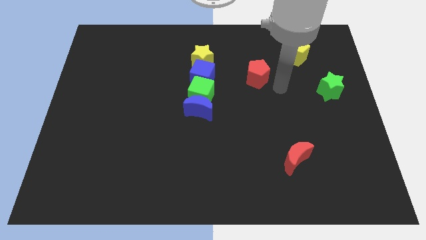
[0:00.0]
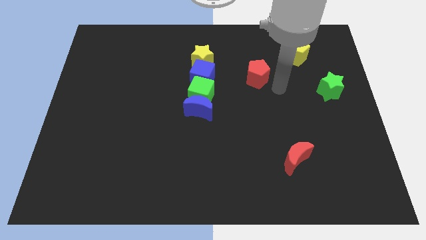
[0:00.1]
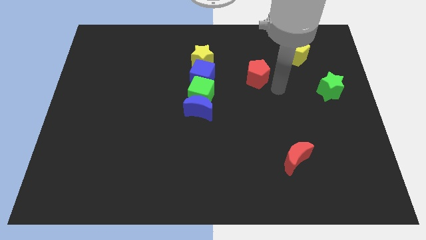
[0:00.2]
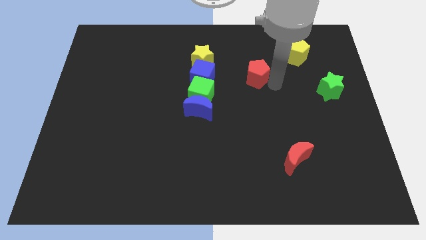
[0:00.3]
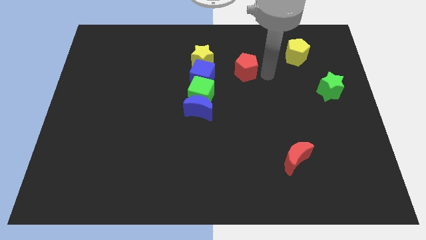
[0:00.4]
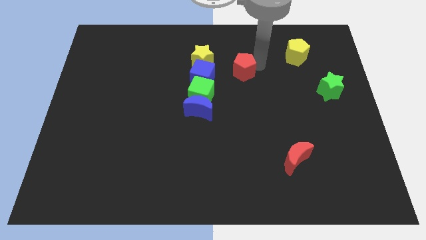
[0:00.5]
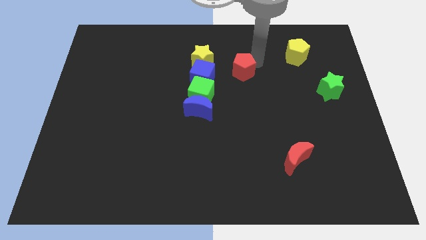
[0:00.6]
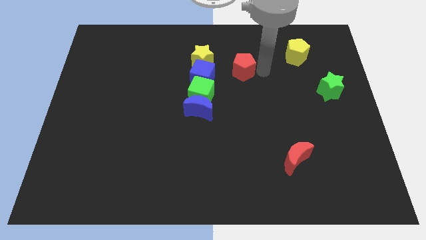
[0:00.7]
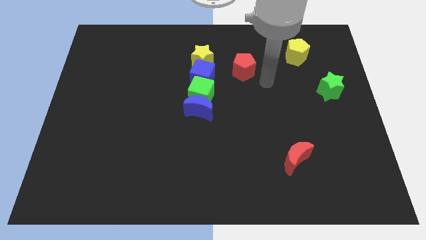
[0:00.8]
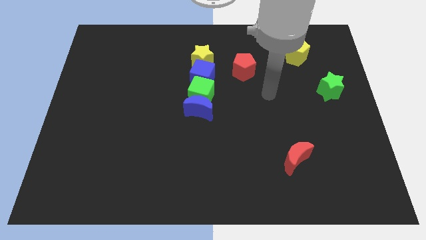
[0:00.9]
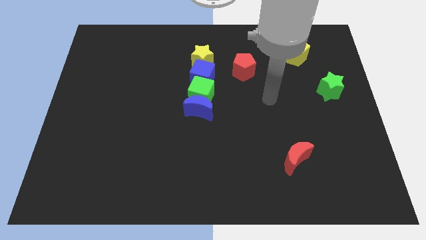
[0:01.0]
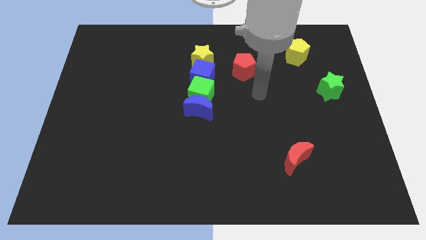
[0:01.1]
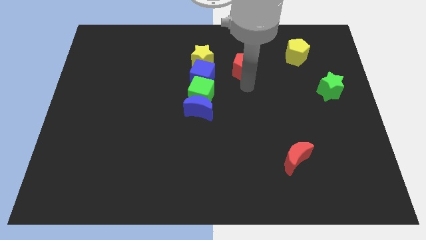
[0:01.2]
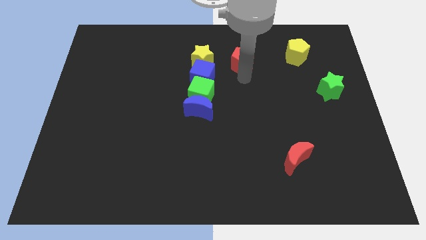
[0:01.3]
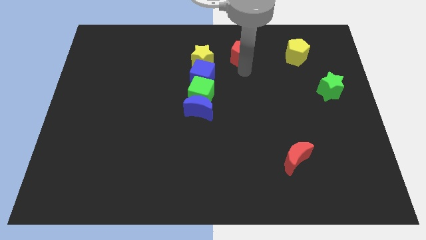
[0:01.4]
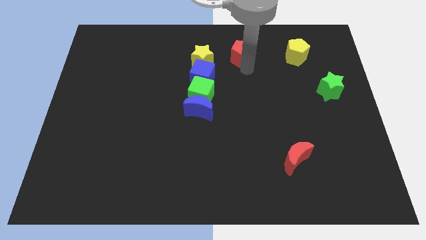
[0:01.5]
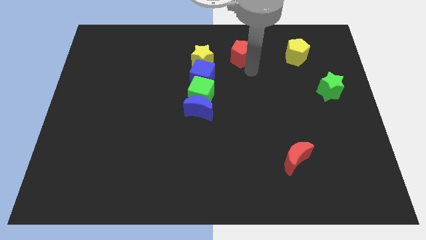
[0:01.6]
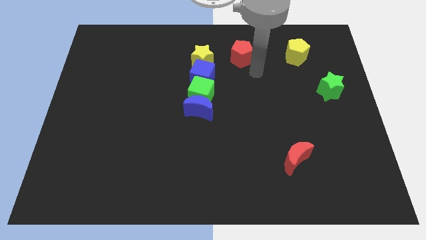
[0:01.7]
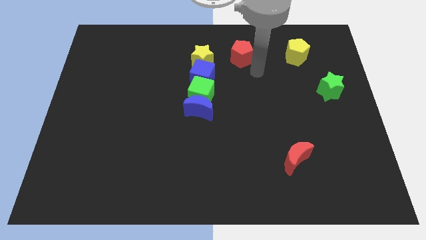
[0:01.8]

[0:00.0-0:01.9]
place red pentagon to the right of the yellow star

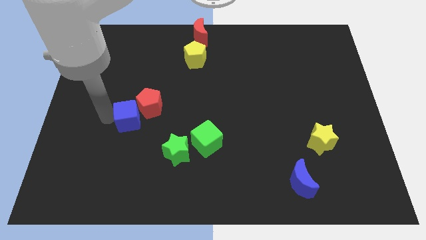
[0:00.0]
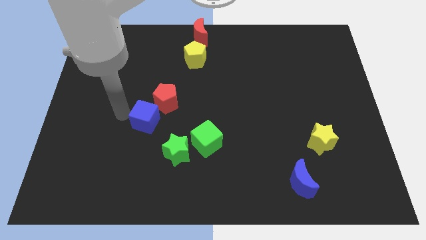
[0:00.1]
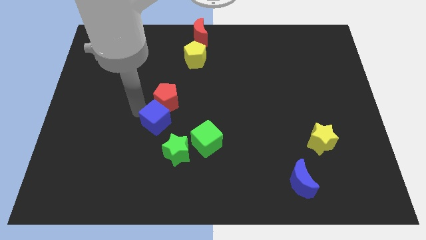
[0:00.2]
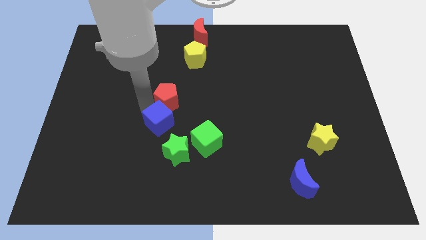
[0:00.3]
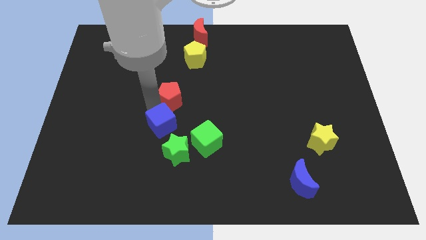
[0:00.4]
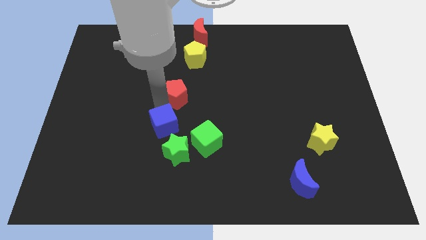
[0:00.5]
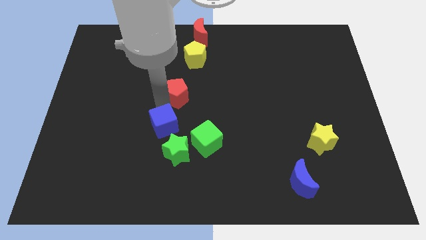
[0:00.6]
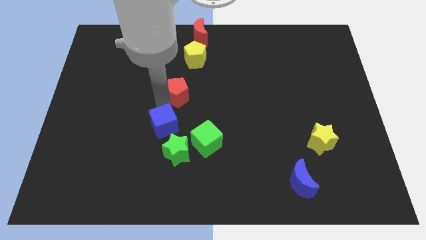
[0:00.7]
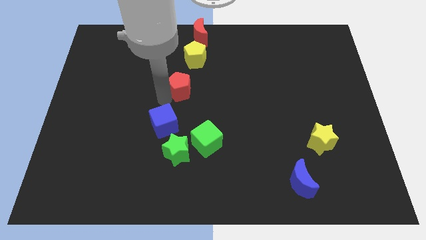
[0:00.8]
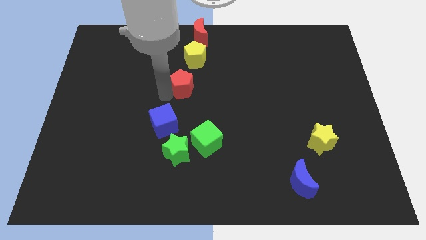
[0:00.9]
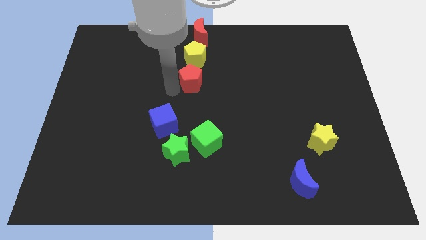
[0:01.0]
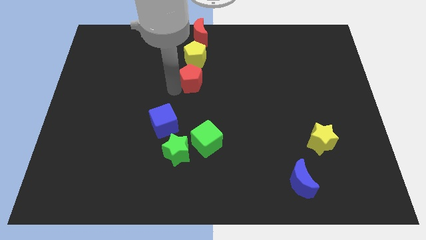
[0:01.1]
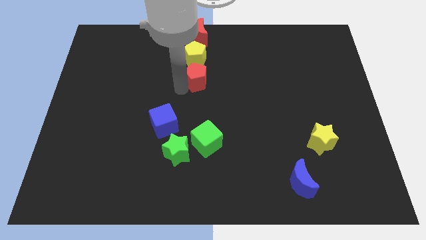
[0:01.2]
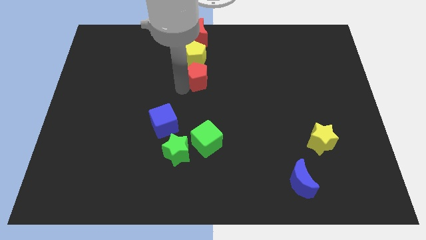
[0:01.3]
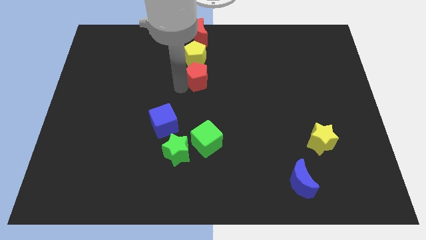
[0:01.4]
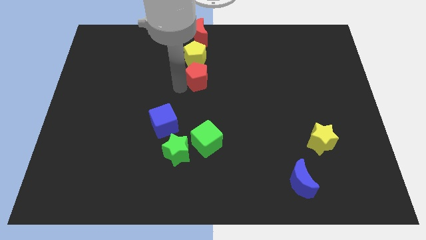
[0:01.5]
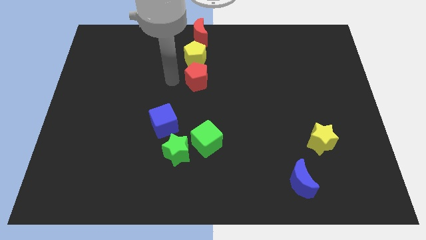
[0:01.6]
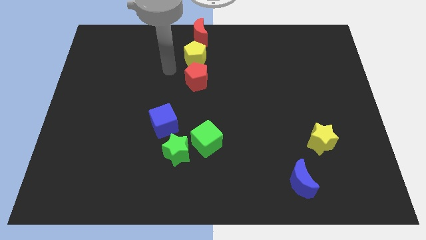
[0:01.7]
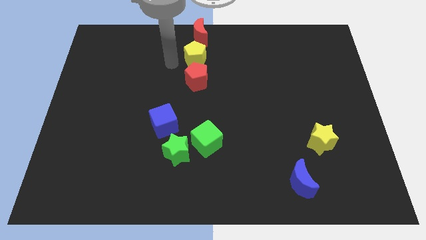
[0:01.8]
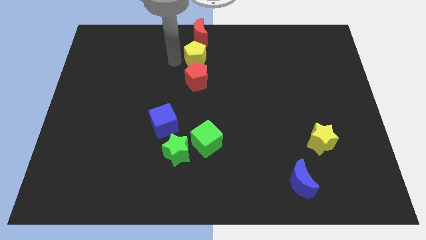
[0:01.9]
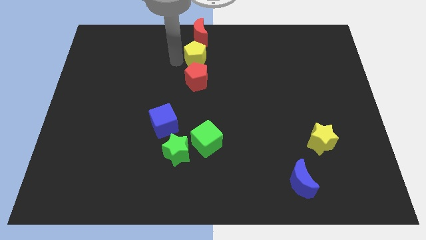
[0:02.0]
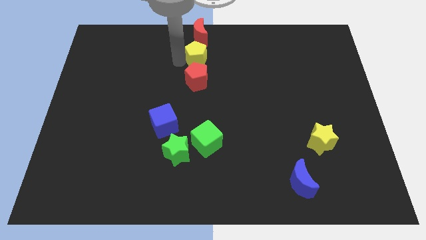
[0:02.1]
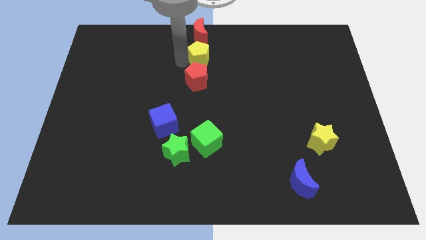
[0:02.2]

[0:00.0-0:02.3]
move the red pentagon below the yellow pentagon

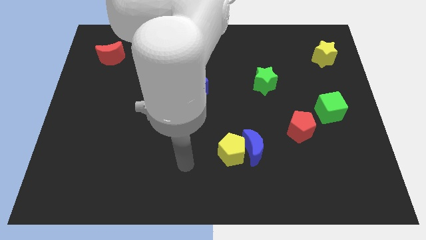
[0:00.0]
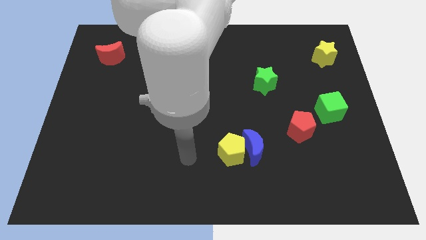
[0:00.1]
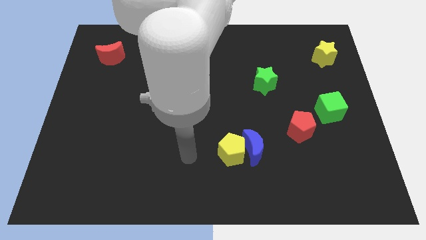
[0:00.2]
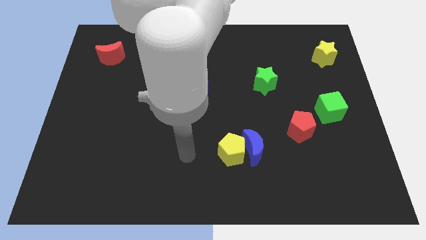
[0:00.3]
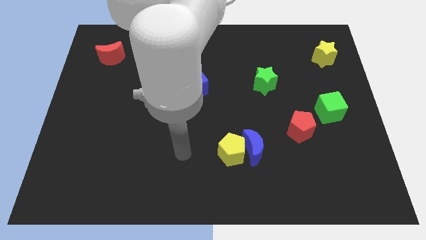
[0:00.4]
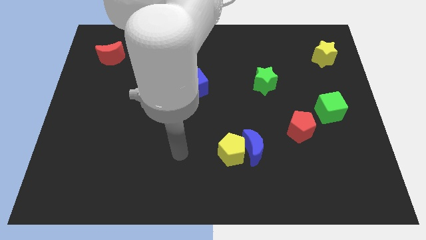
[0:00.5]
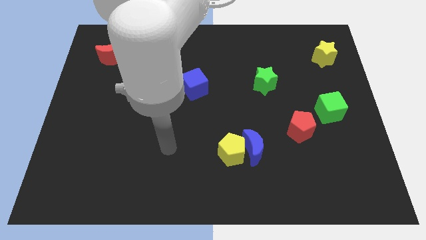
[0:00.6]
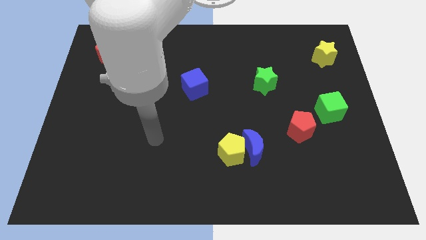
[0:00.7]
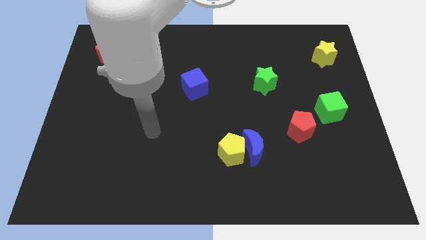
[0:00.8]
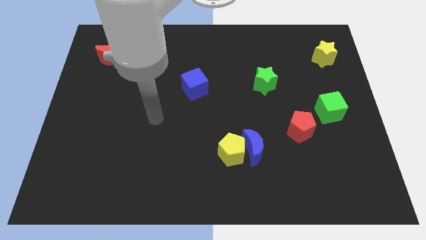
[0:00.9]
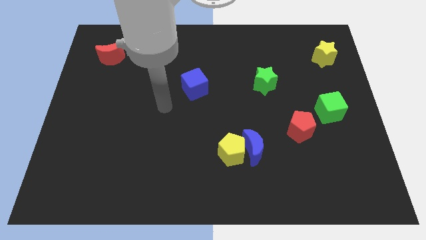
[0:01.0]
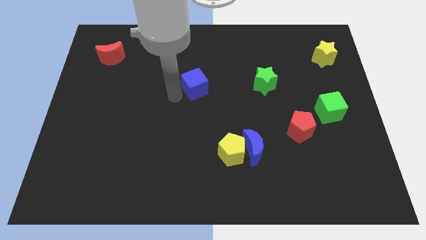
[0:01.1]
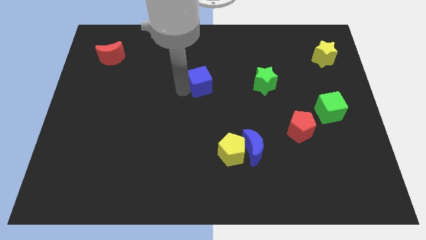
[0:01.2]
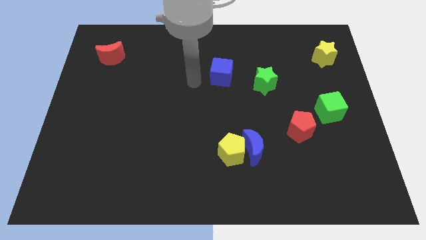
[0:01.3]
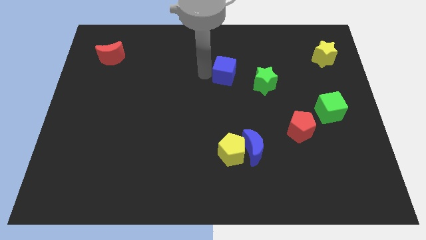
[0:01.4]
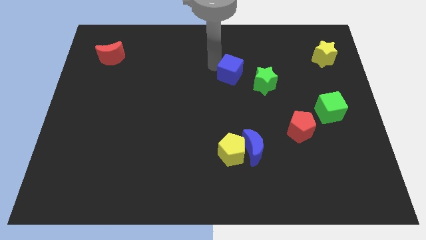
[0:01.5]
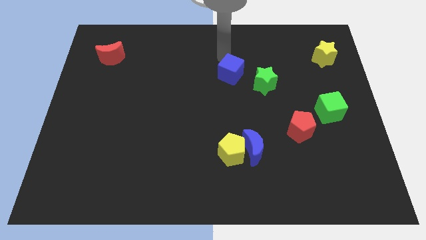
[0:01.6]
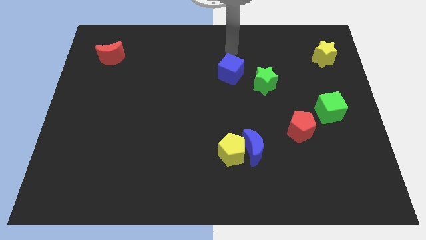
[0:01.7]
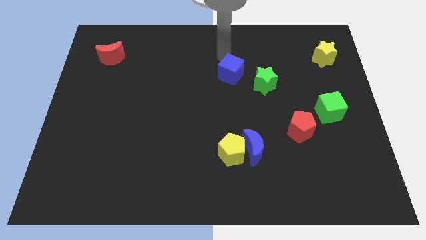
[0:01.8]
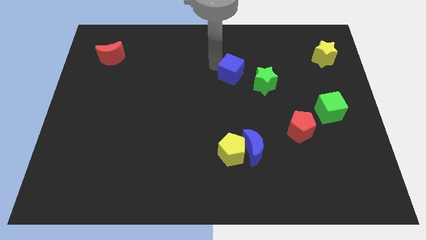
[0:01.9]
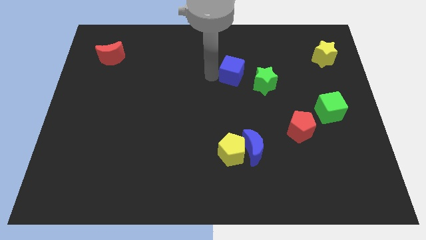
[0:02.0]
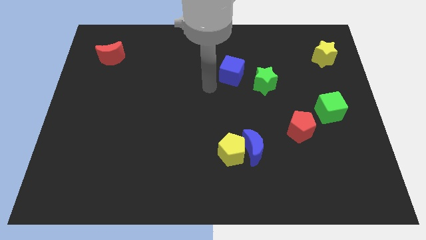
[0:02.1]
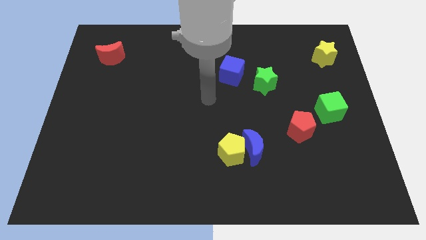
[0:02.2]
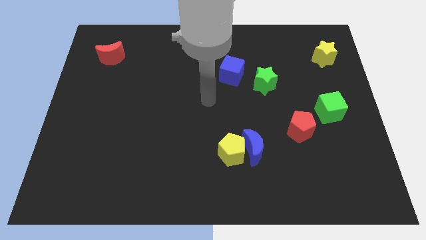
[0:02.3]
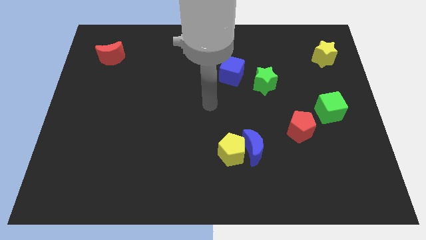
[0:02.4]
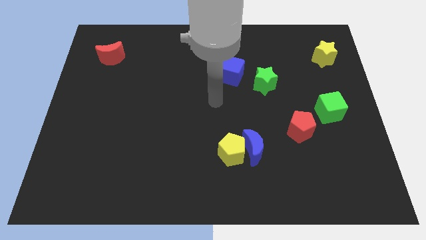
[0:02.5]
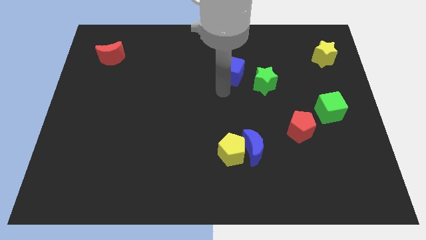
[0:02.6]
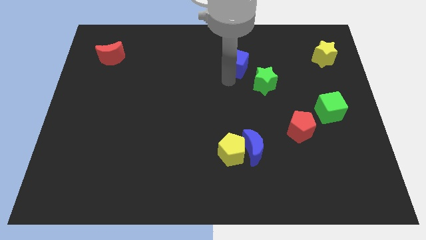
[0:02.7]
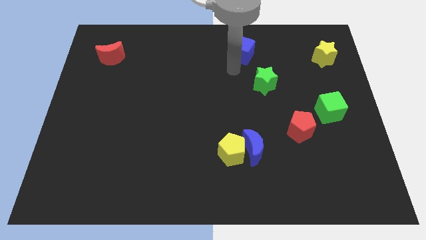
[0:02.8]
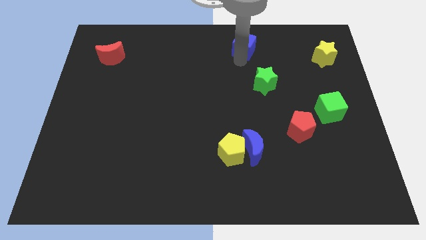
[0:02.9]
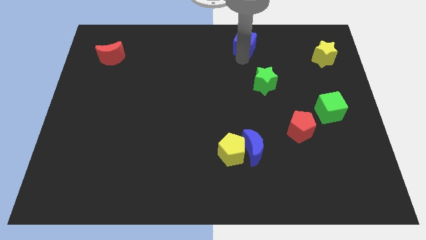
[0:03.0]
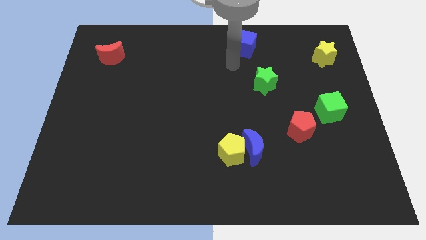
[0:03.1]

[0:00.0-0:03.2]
move the blue cube to the top right to the board

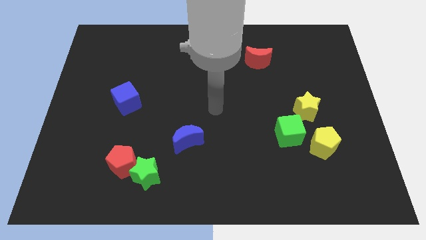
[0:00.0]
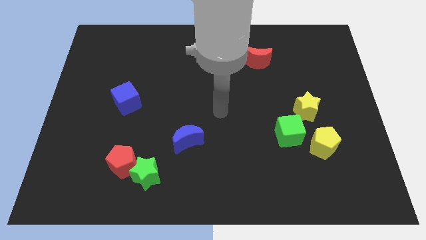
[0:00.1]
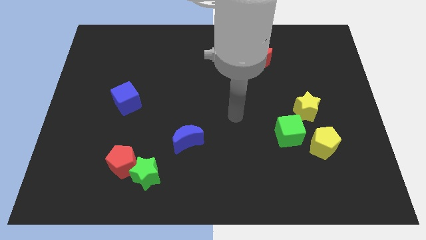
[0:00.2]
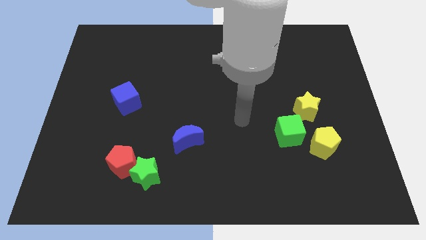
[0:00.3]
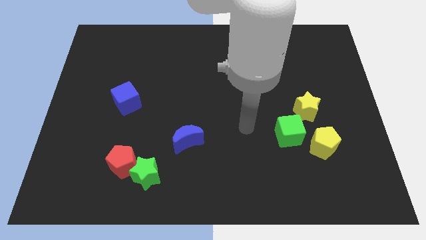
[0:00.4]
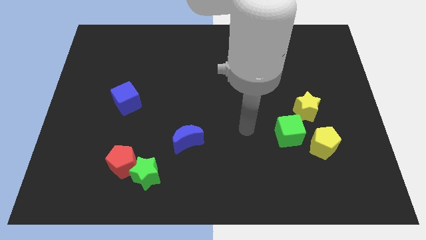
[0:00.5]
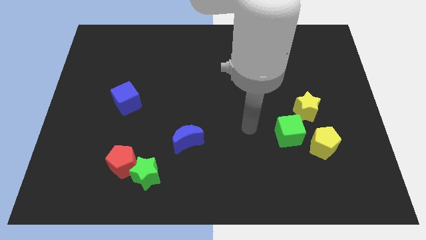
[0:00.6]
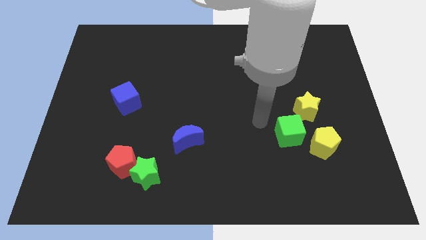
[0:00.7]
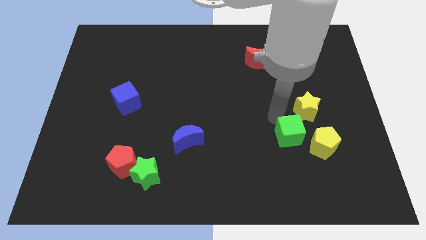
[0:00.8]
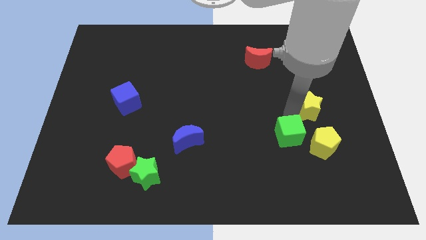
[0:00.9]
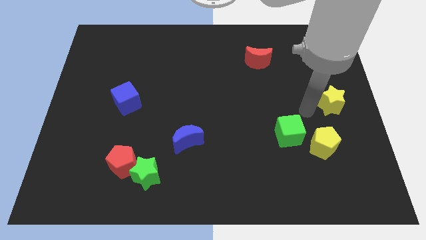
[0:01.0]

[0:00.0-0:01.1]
slightly push the yellow star to the right of the board

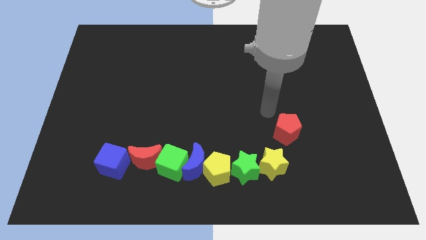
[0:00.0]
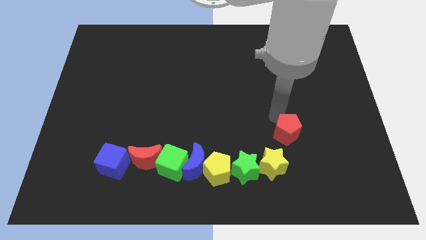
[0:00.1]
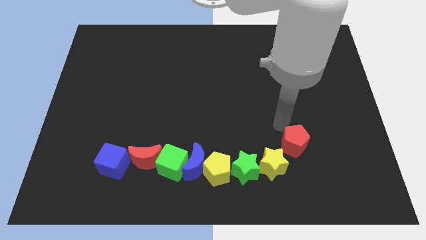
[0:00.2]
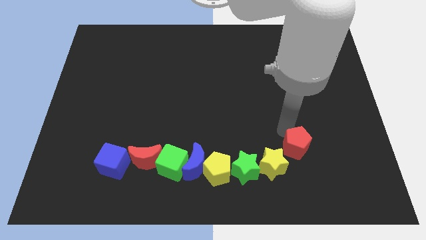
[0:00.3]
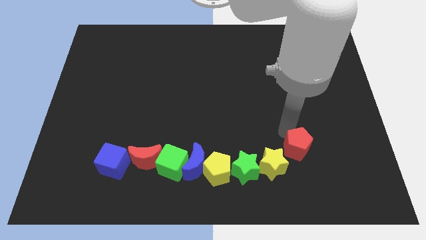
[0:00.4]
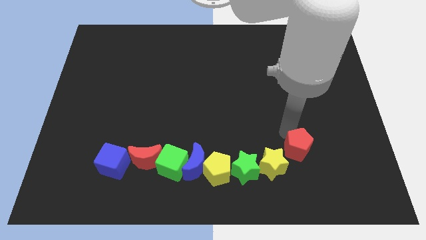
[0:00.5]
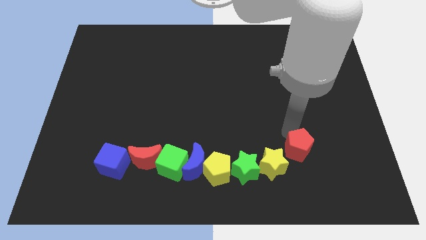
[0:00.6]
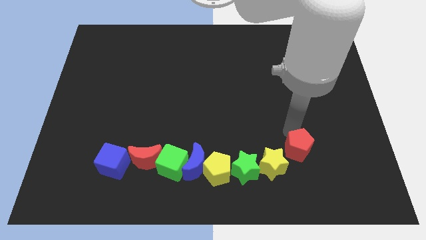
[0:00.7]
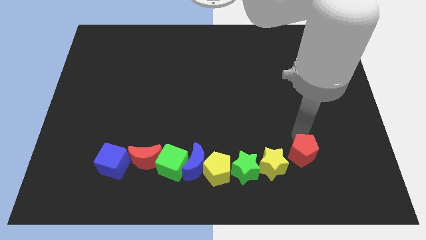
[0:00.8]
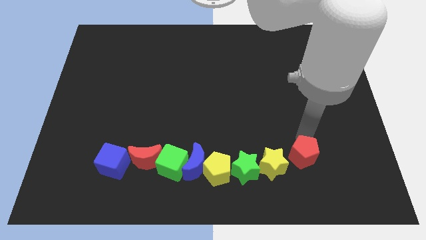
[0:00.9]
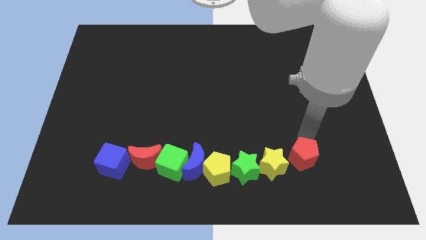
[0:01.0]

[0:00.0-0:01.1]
move the red pentagon to the right side of the yellow star
